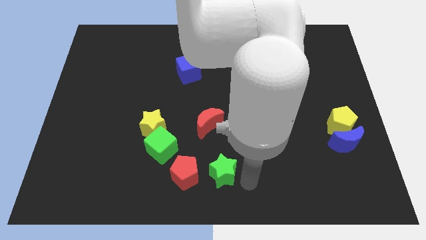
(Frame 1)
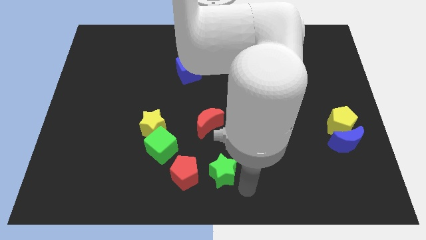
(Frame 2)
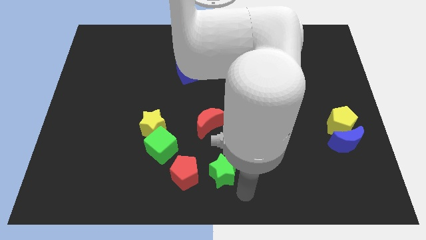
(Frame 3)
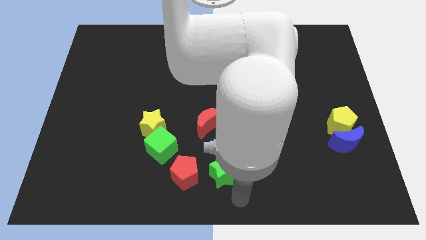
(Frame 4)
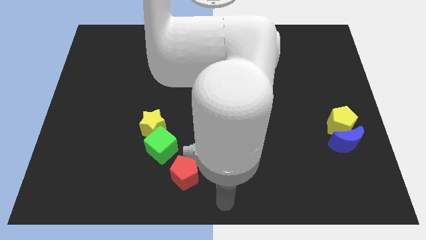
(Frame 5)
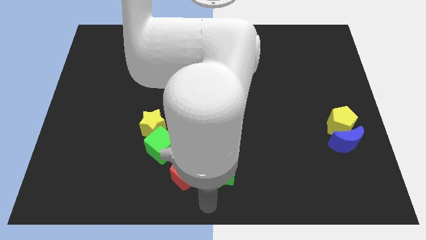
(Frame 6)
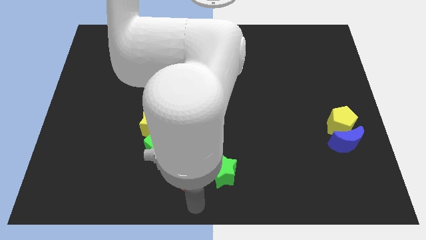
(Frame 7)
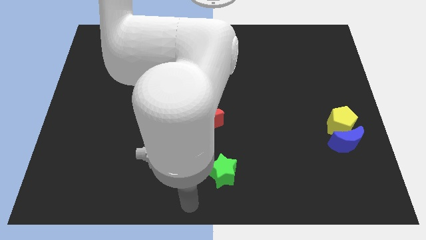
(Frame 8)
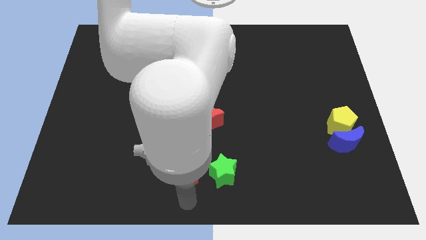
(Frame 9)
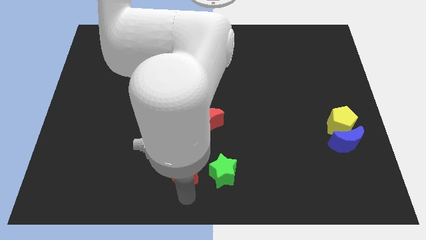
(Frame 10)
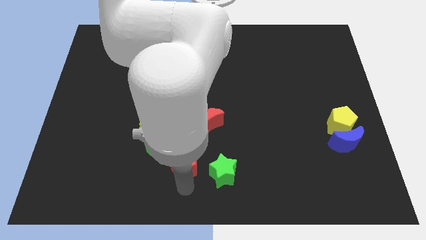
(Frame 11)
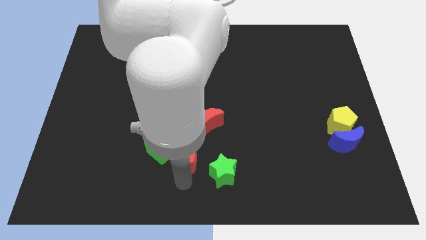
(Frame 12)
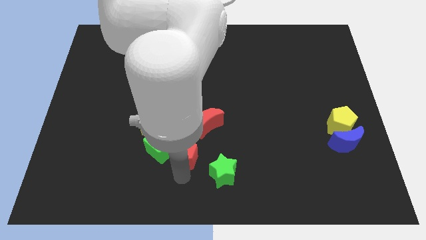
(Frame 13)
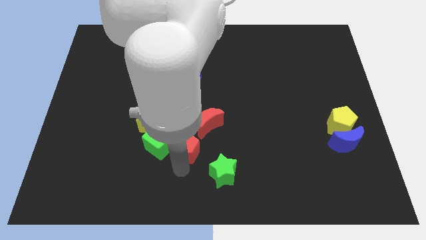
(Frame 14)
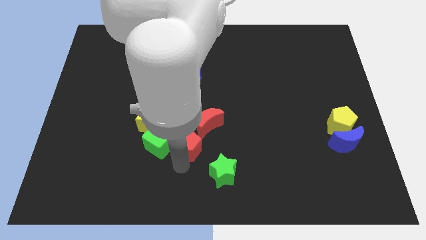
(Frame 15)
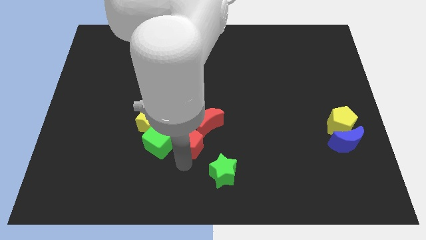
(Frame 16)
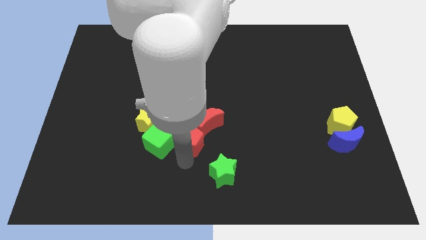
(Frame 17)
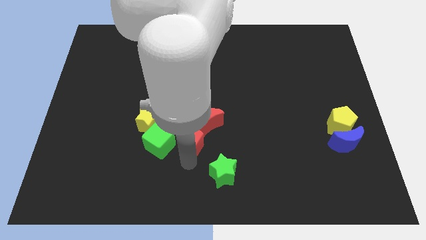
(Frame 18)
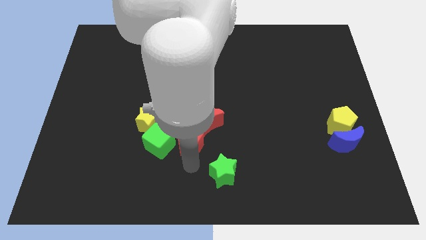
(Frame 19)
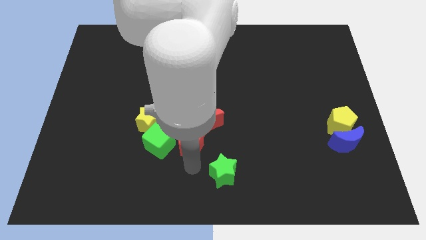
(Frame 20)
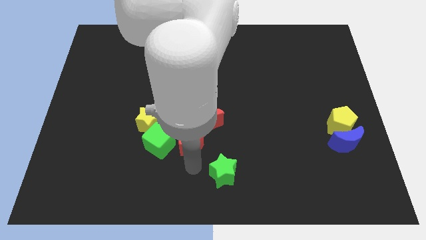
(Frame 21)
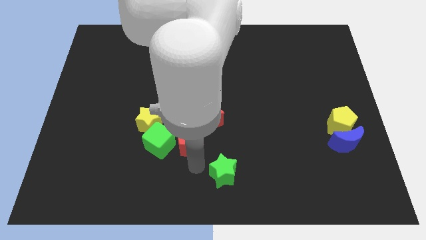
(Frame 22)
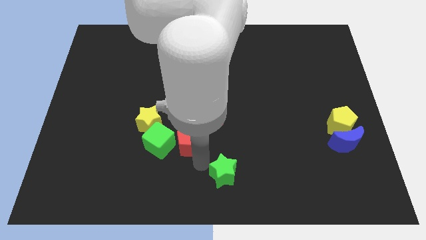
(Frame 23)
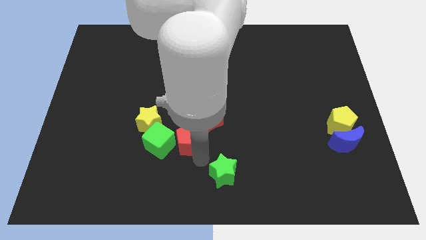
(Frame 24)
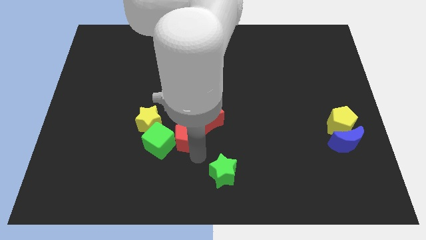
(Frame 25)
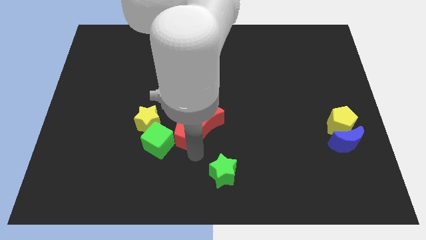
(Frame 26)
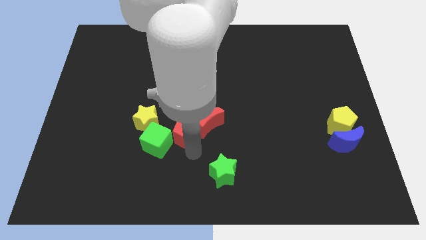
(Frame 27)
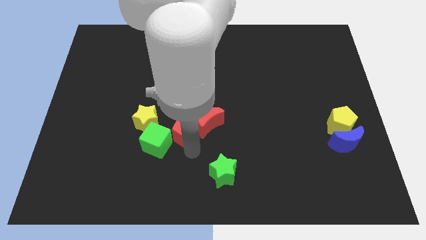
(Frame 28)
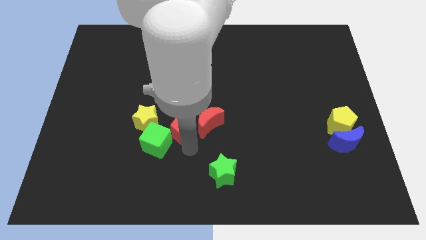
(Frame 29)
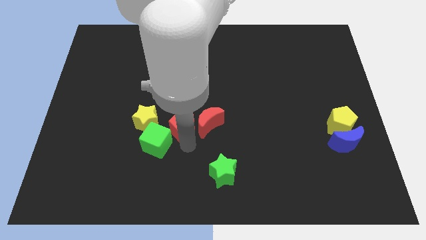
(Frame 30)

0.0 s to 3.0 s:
place the red pentagon in between the green cube and red moon

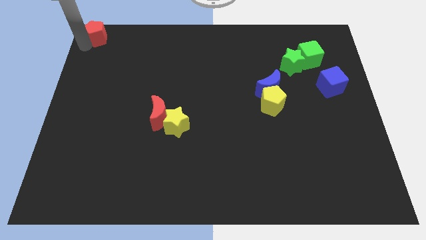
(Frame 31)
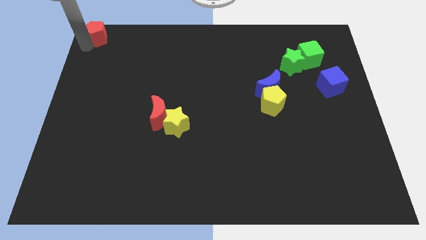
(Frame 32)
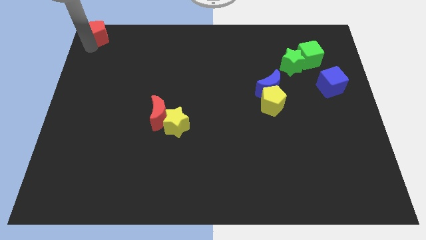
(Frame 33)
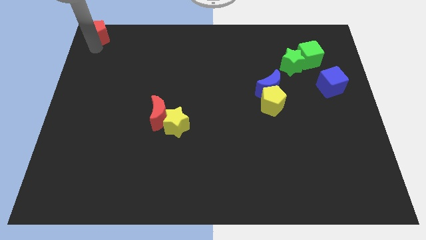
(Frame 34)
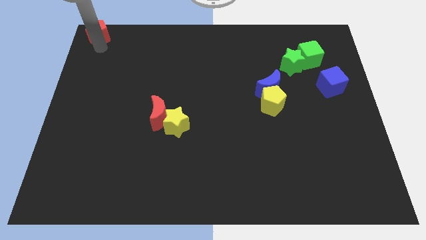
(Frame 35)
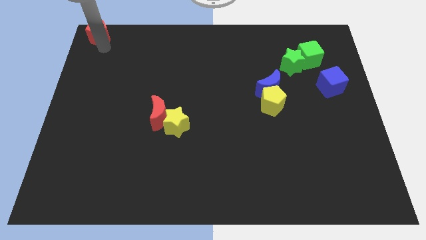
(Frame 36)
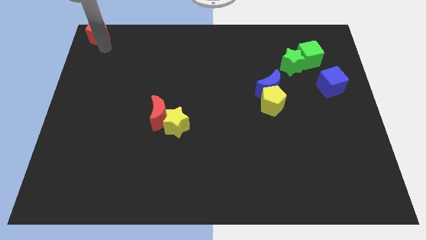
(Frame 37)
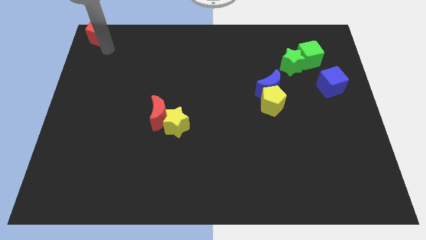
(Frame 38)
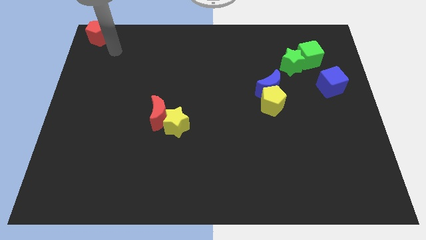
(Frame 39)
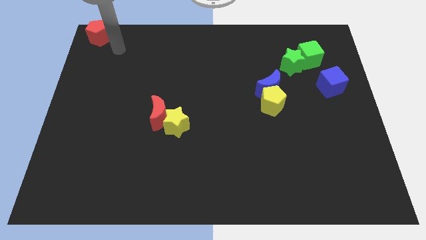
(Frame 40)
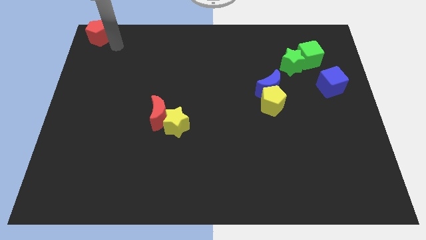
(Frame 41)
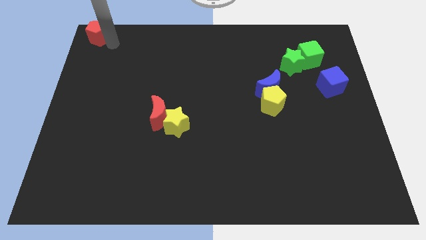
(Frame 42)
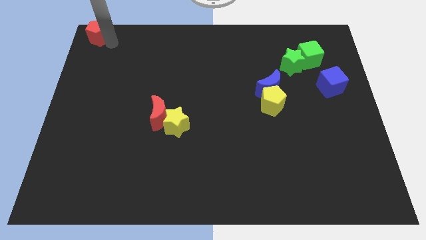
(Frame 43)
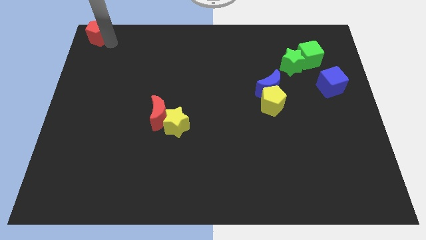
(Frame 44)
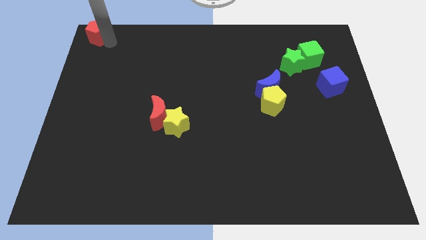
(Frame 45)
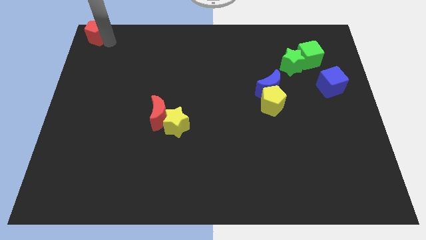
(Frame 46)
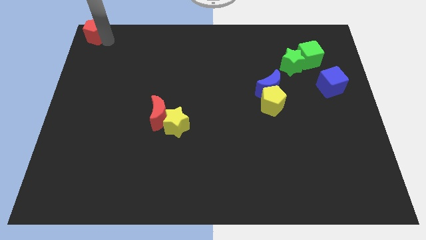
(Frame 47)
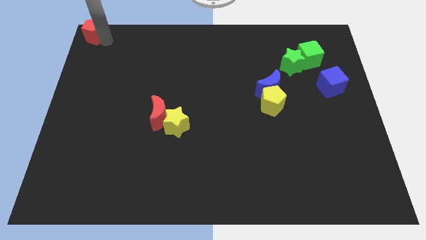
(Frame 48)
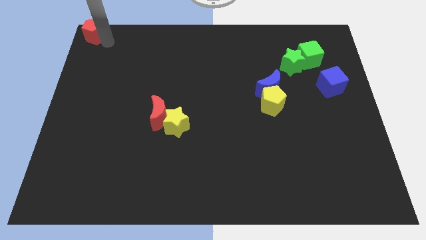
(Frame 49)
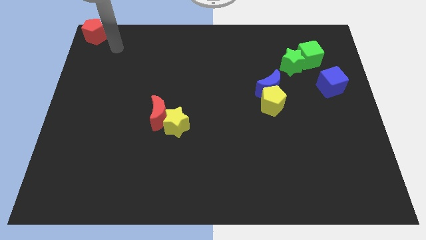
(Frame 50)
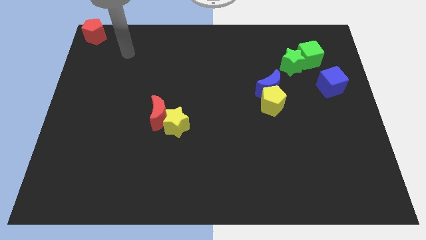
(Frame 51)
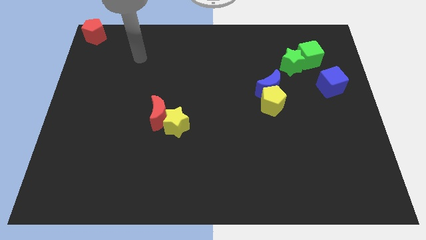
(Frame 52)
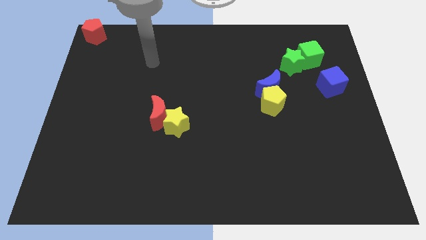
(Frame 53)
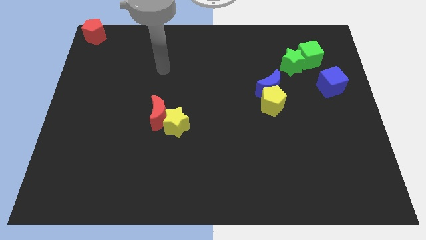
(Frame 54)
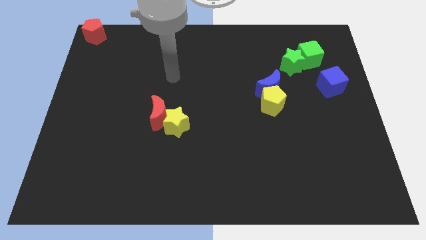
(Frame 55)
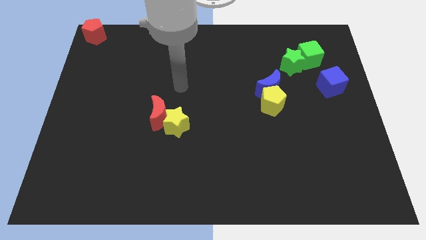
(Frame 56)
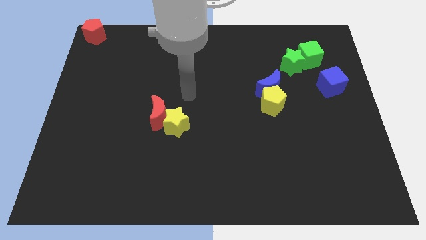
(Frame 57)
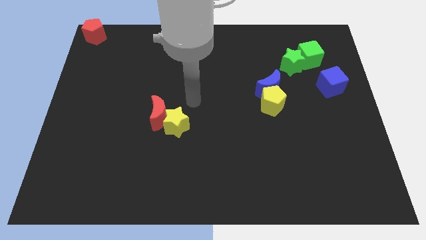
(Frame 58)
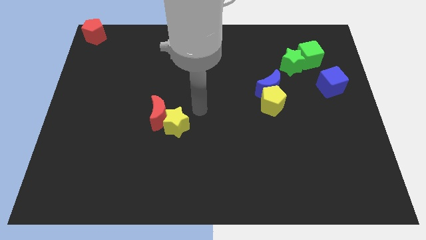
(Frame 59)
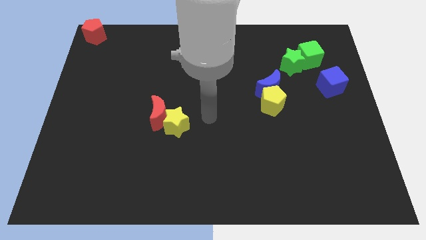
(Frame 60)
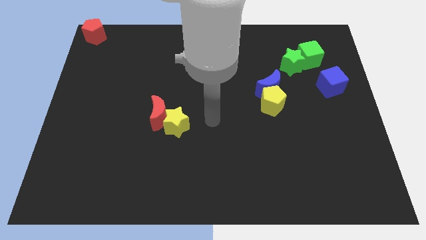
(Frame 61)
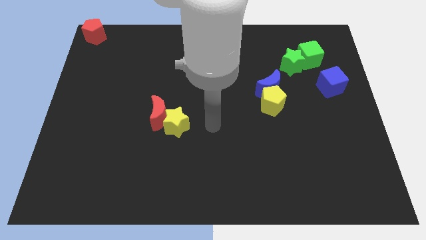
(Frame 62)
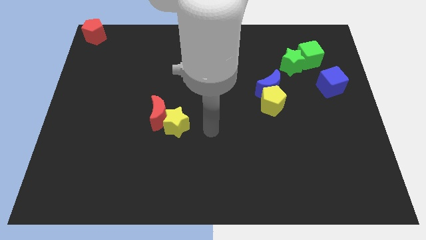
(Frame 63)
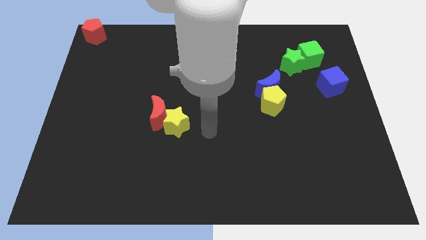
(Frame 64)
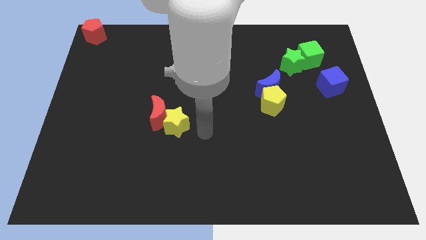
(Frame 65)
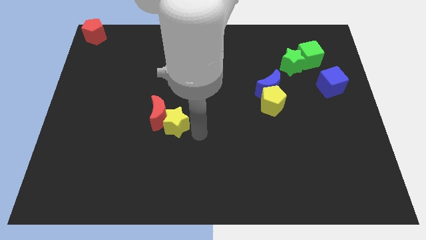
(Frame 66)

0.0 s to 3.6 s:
move your arm towards the yellow star

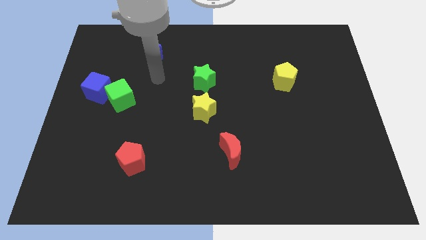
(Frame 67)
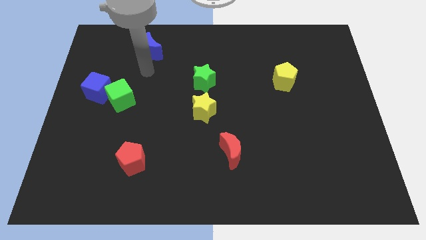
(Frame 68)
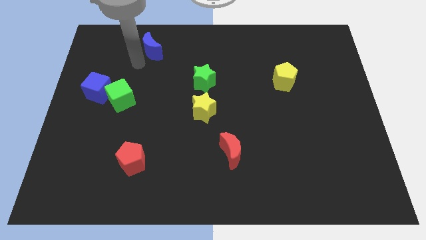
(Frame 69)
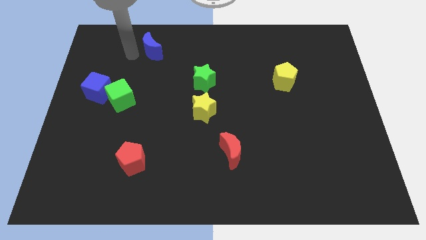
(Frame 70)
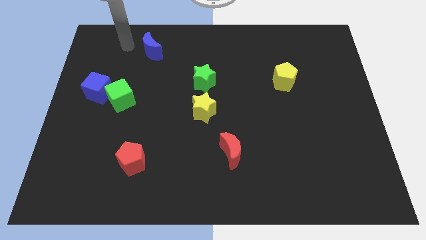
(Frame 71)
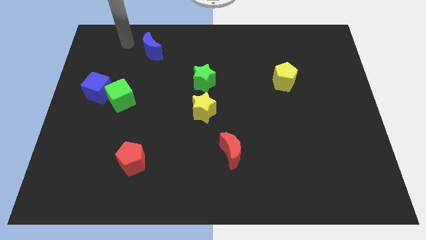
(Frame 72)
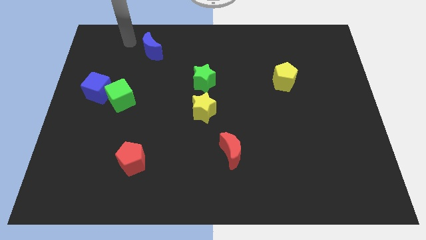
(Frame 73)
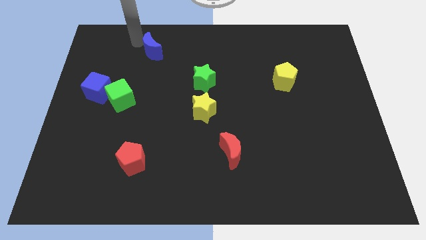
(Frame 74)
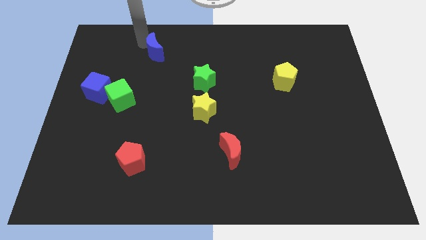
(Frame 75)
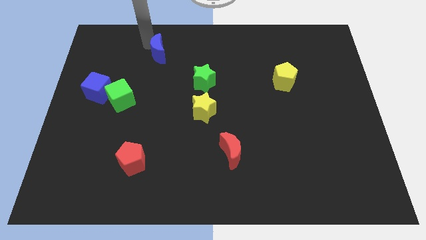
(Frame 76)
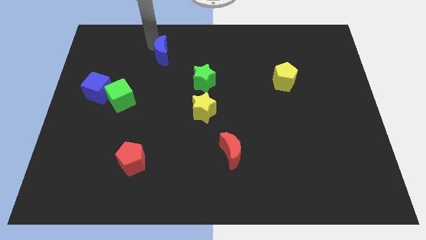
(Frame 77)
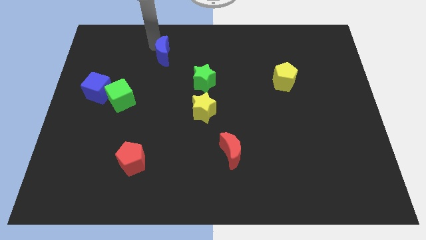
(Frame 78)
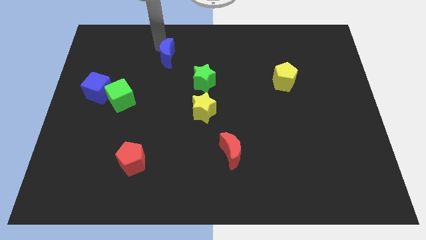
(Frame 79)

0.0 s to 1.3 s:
move blue crescent slightly towards its right

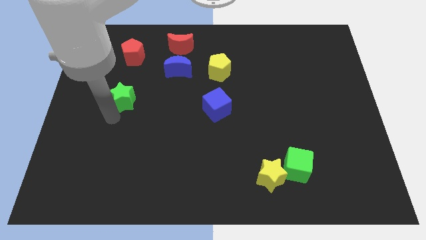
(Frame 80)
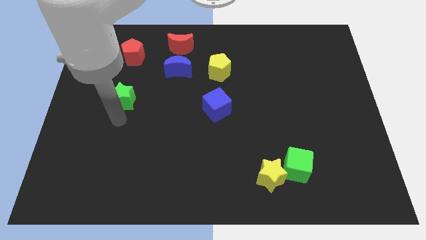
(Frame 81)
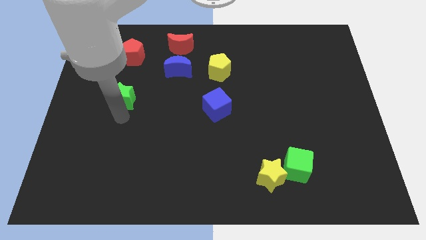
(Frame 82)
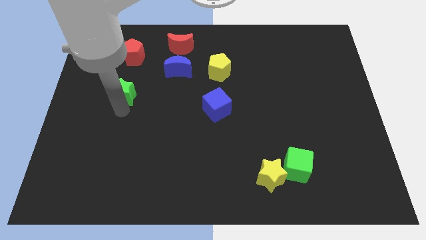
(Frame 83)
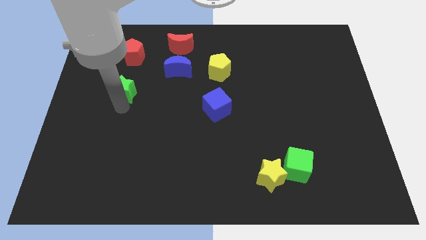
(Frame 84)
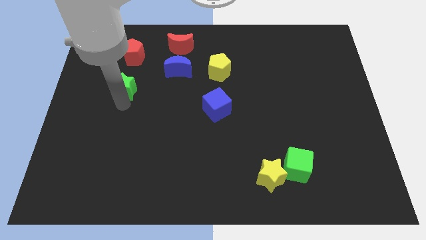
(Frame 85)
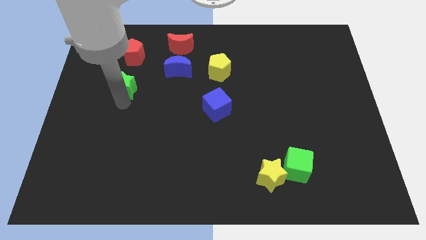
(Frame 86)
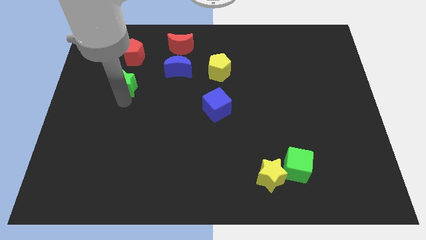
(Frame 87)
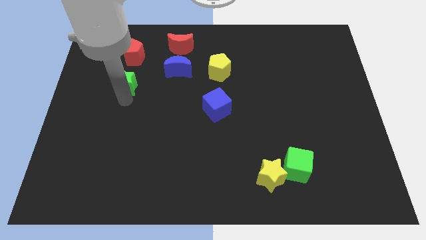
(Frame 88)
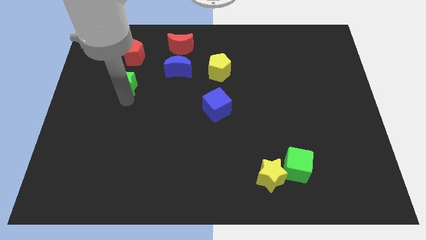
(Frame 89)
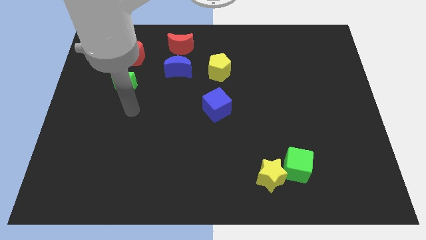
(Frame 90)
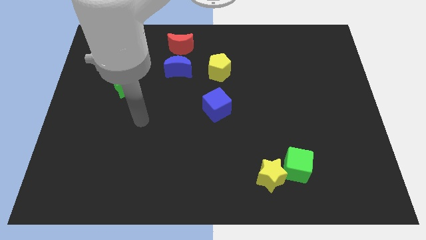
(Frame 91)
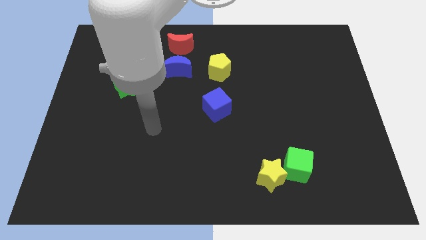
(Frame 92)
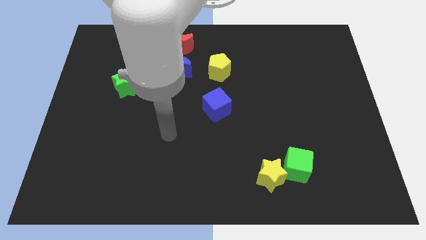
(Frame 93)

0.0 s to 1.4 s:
place the green star below the red pentagon
